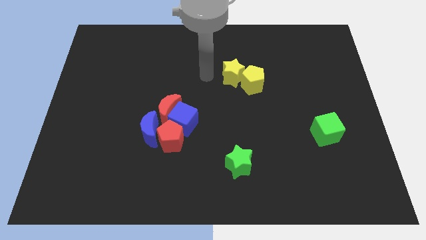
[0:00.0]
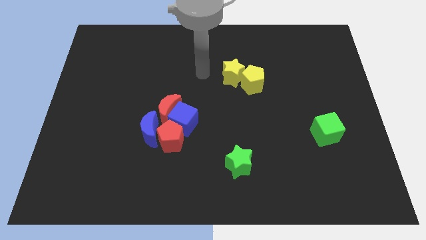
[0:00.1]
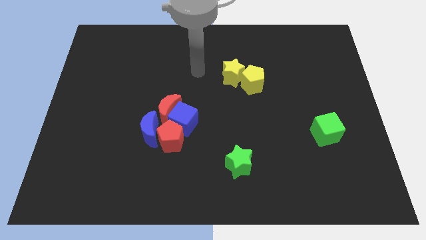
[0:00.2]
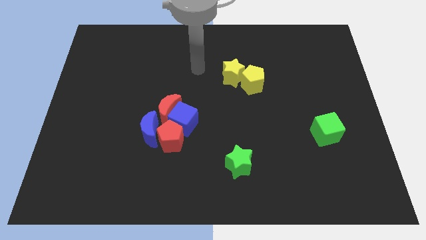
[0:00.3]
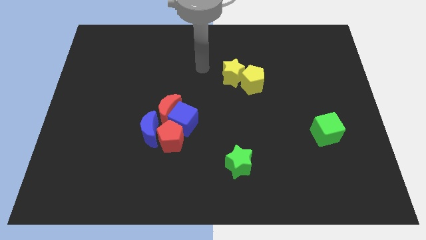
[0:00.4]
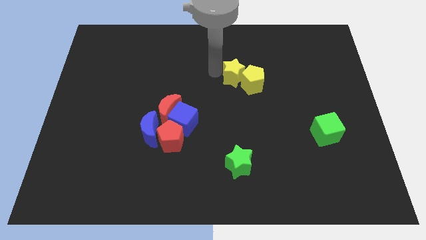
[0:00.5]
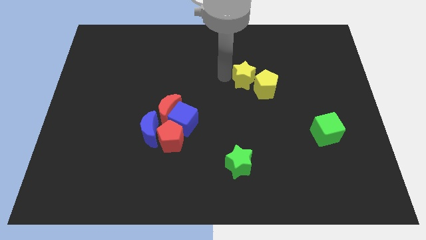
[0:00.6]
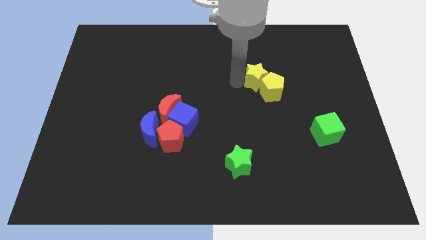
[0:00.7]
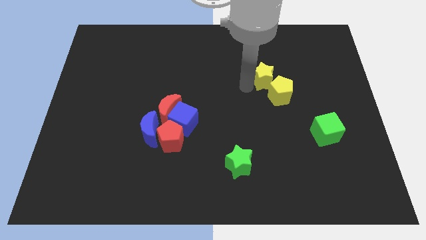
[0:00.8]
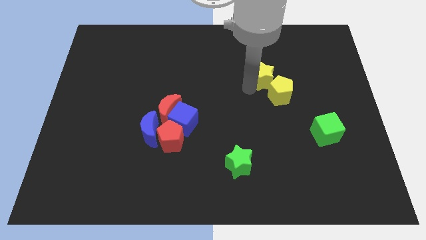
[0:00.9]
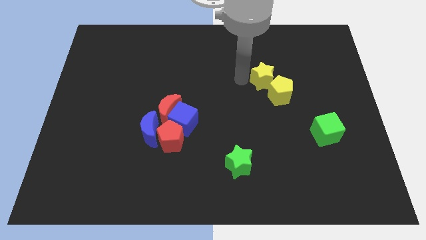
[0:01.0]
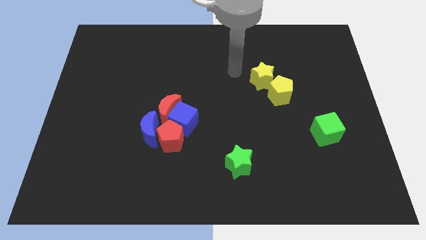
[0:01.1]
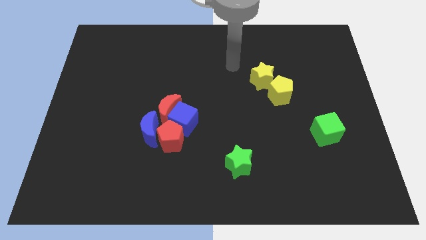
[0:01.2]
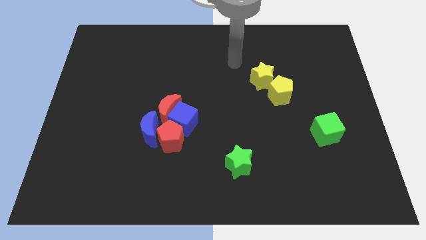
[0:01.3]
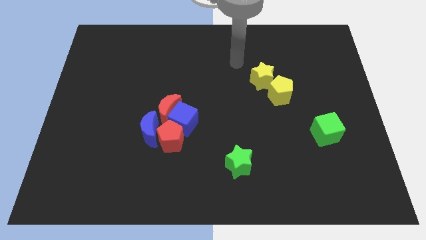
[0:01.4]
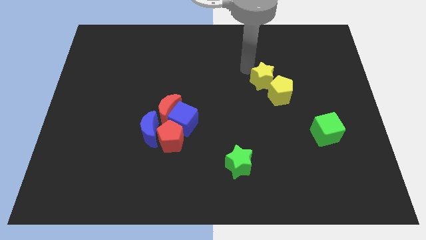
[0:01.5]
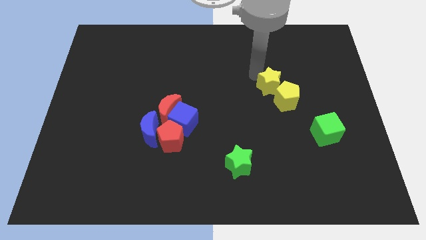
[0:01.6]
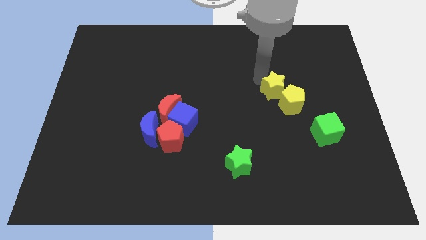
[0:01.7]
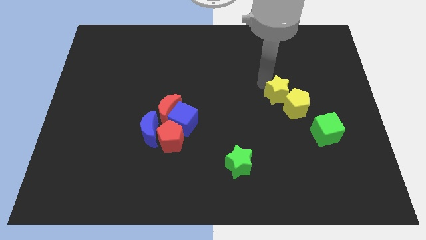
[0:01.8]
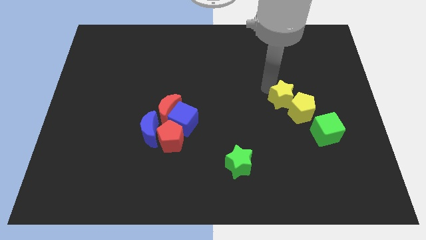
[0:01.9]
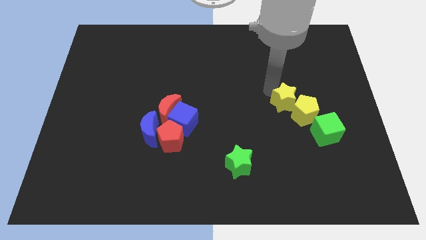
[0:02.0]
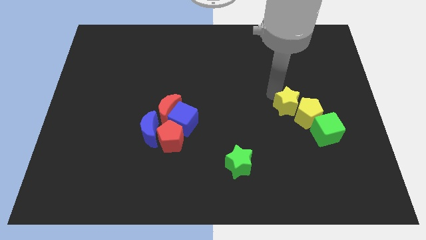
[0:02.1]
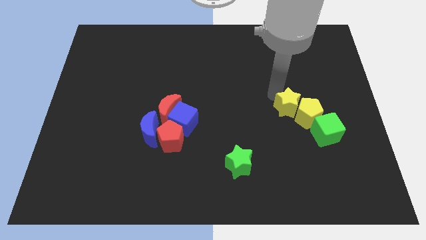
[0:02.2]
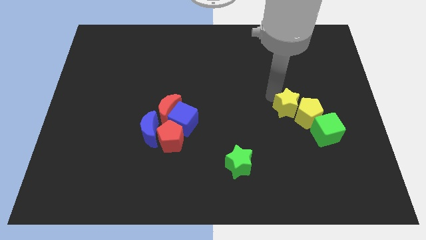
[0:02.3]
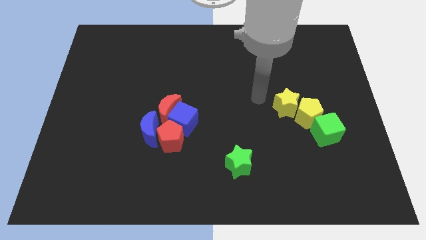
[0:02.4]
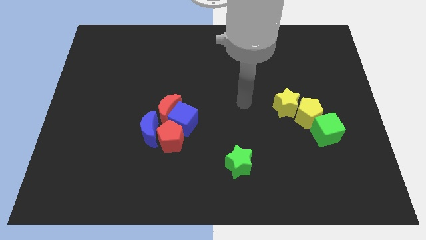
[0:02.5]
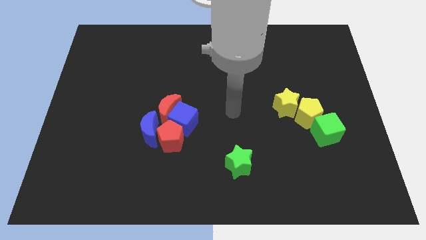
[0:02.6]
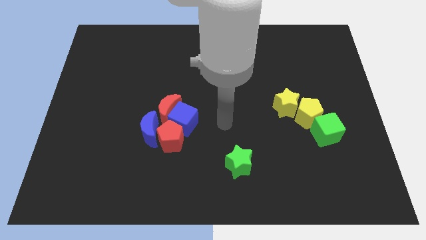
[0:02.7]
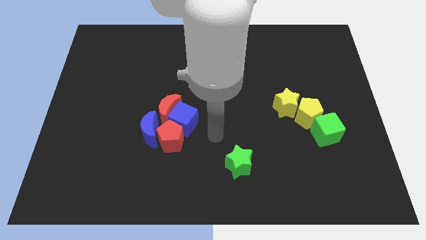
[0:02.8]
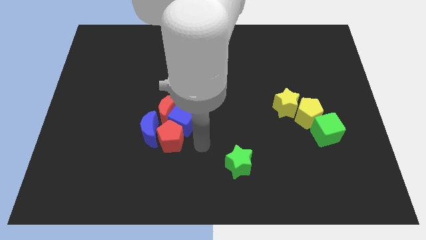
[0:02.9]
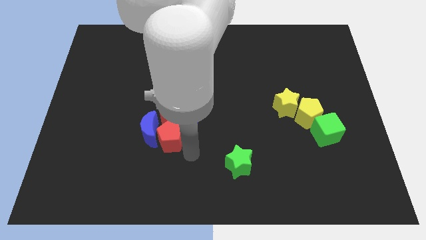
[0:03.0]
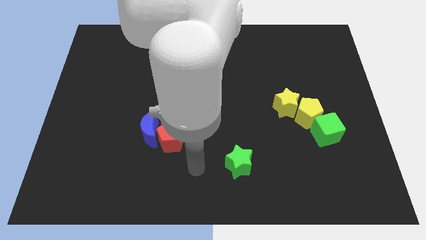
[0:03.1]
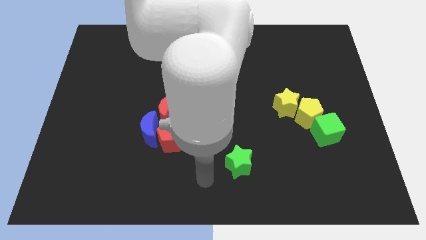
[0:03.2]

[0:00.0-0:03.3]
place the yellow blocks on the top left of the green cube

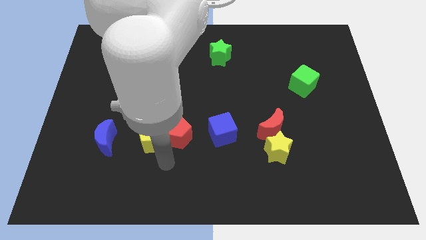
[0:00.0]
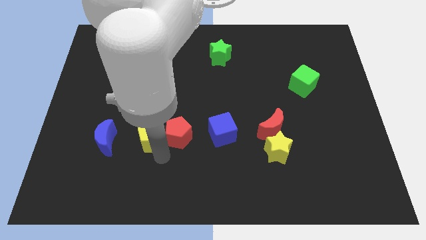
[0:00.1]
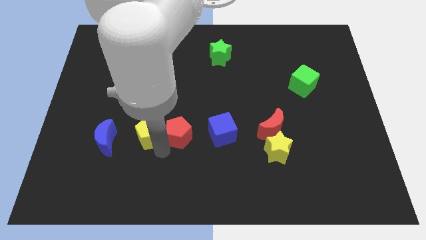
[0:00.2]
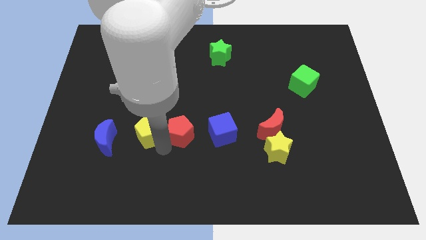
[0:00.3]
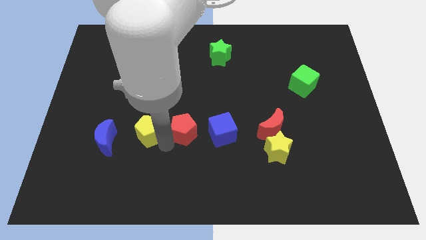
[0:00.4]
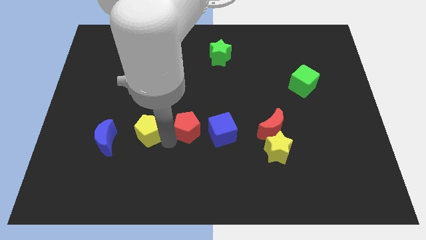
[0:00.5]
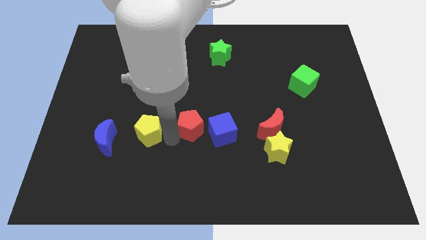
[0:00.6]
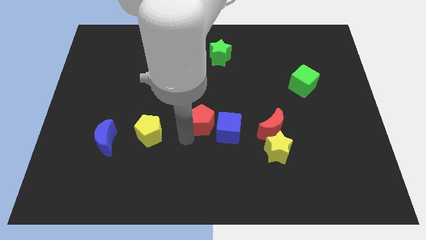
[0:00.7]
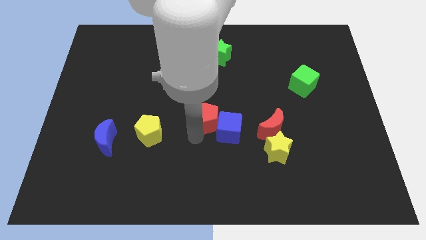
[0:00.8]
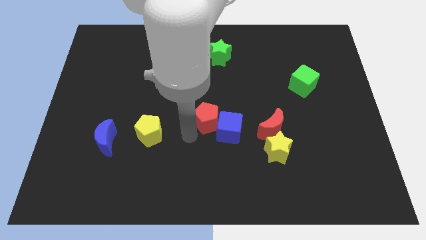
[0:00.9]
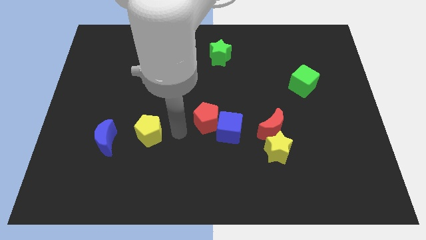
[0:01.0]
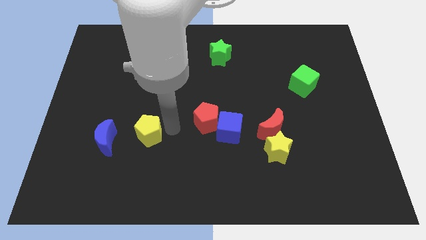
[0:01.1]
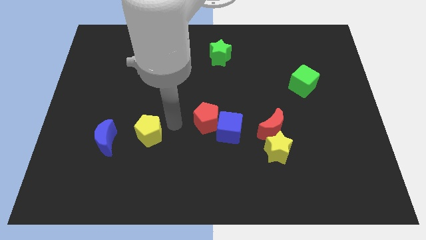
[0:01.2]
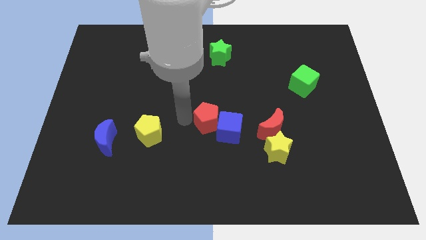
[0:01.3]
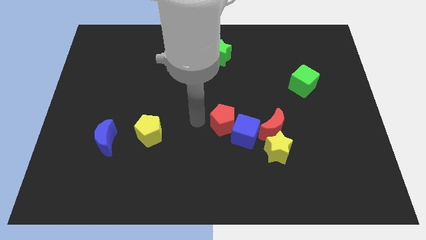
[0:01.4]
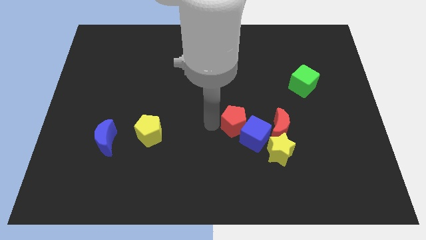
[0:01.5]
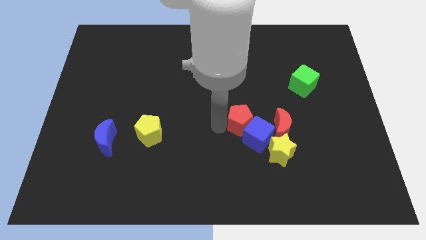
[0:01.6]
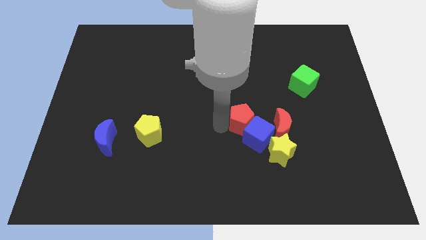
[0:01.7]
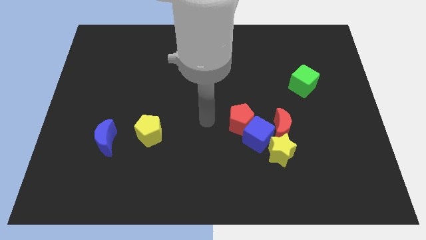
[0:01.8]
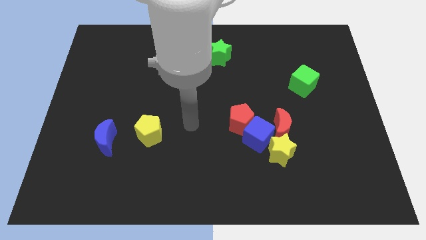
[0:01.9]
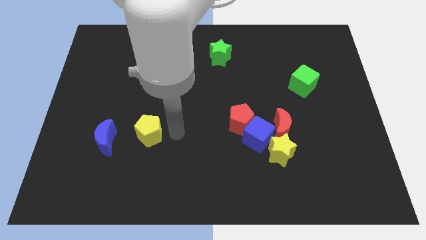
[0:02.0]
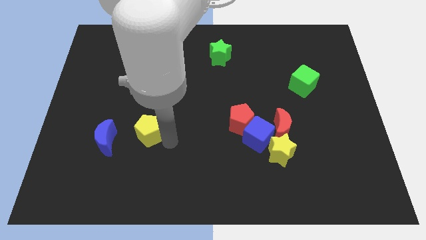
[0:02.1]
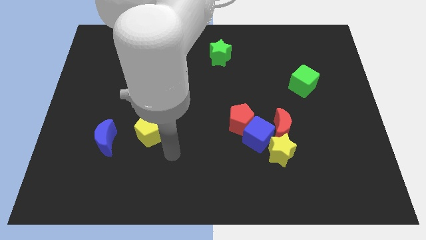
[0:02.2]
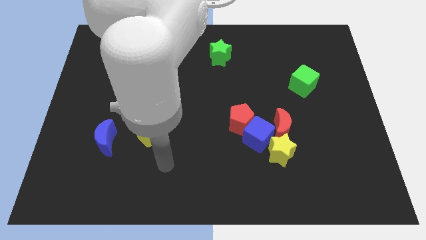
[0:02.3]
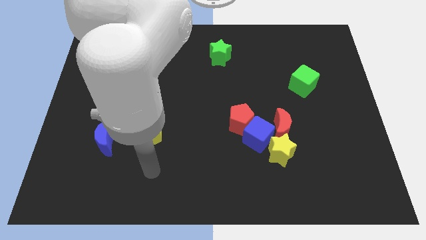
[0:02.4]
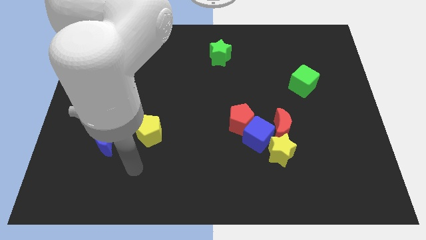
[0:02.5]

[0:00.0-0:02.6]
push red pentagon and blue cube in red moon

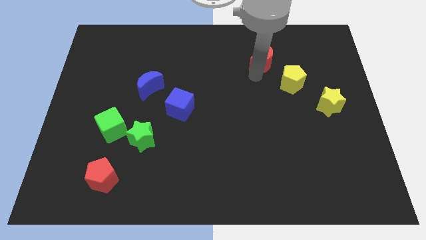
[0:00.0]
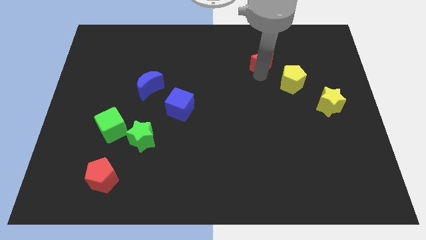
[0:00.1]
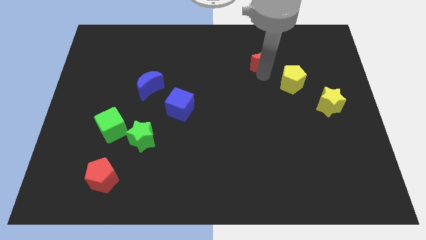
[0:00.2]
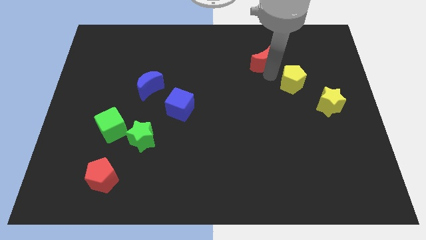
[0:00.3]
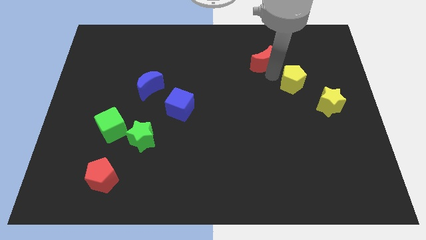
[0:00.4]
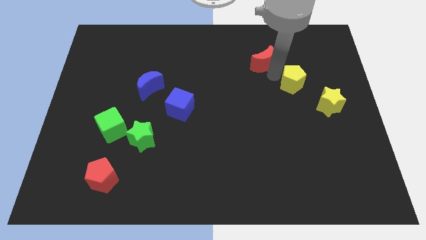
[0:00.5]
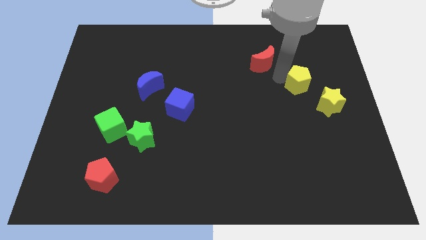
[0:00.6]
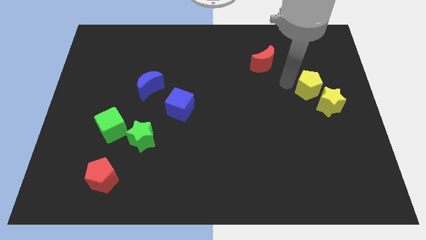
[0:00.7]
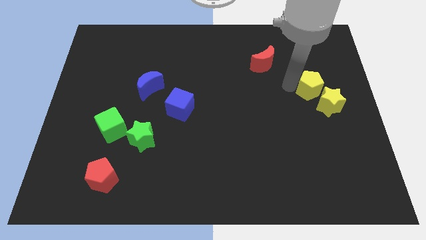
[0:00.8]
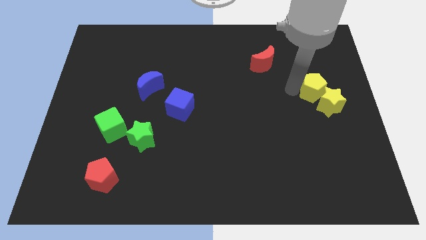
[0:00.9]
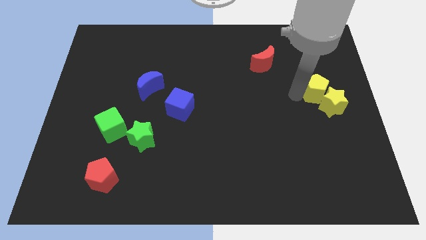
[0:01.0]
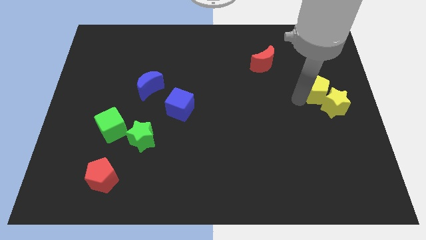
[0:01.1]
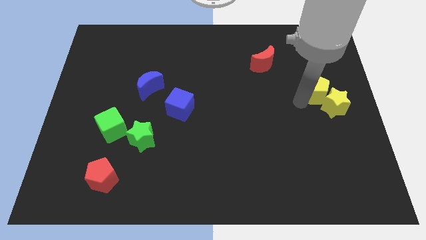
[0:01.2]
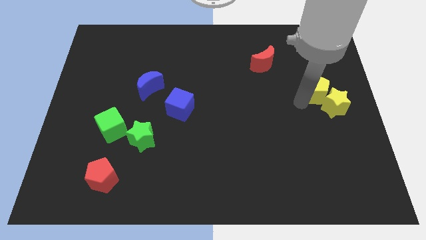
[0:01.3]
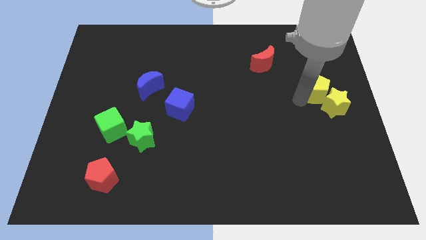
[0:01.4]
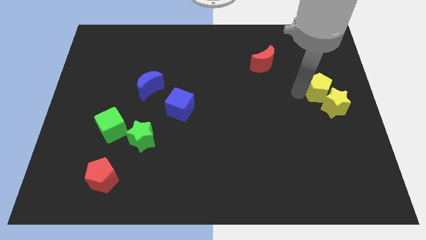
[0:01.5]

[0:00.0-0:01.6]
point your arm below yellow pentagon

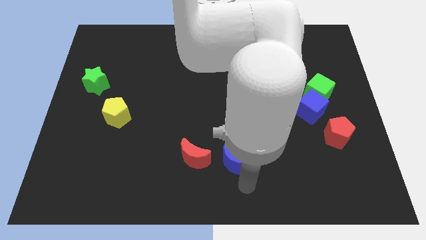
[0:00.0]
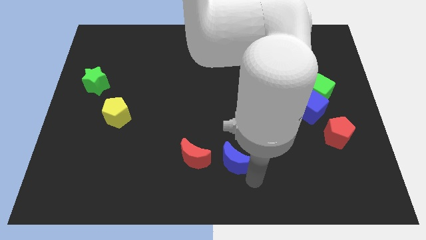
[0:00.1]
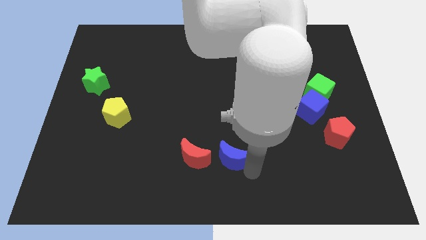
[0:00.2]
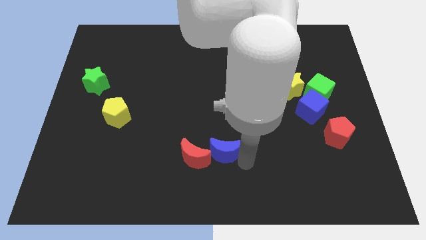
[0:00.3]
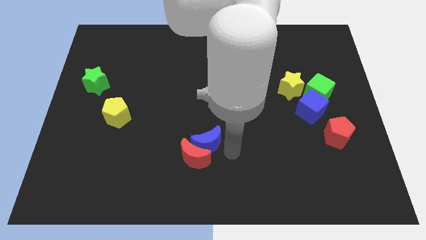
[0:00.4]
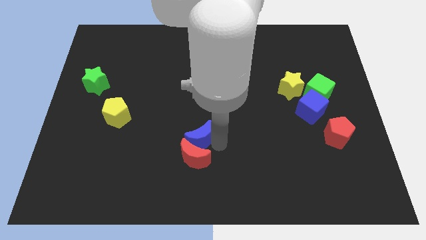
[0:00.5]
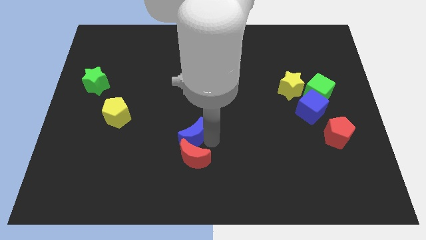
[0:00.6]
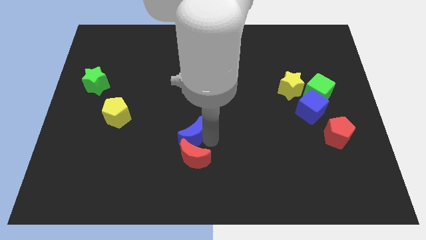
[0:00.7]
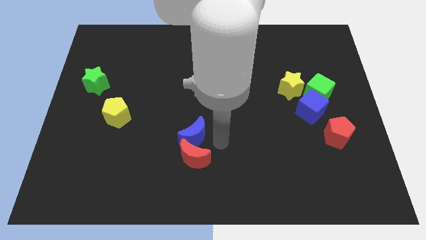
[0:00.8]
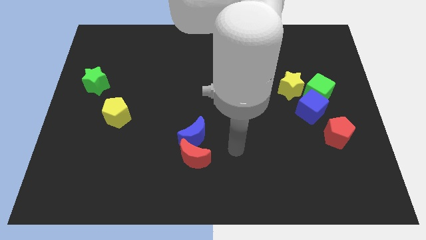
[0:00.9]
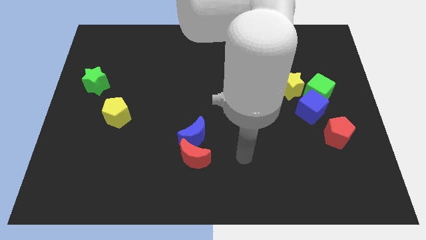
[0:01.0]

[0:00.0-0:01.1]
push the blue moon into the red moon

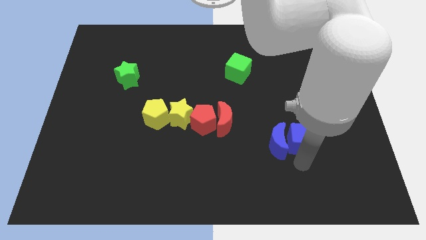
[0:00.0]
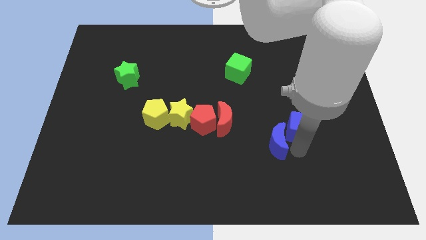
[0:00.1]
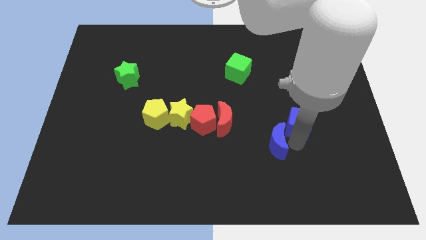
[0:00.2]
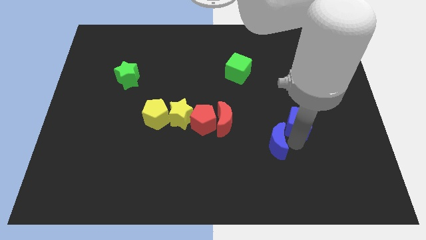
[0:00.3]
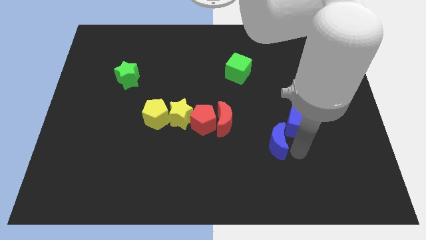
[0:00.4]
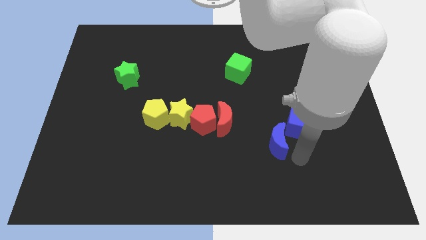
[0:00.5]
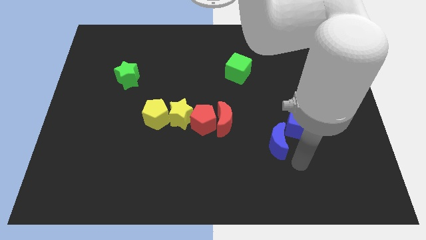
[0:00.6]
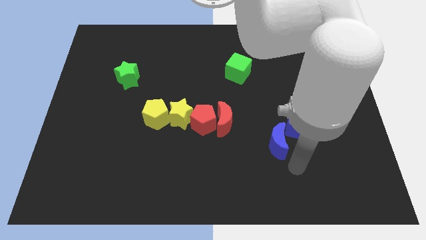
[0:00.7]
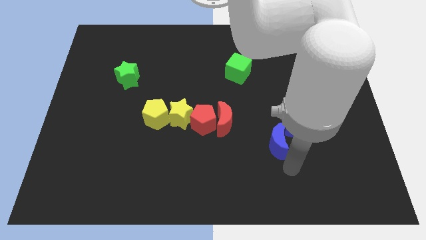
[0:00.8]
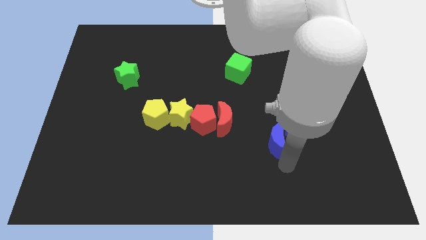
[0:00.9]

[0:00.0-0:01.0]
push blue cube slightly upwards
